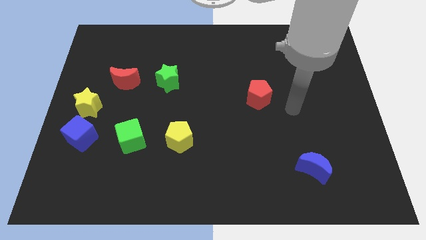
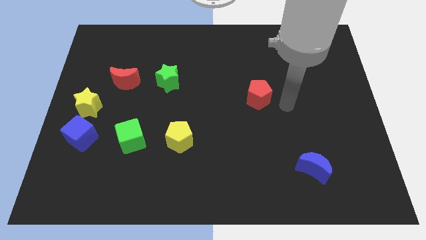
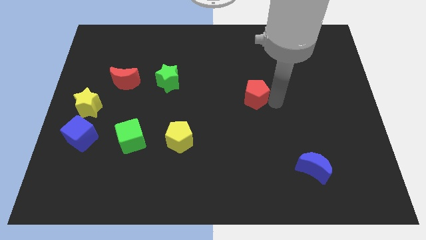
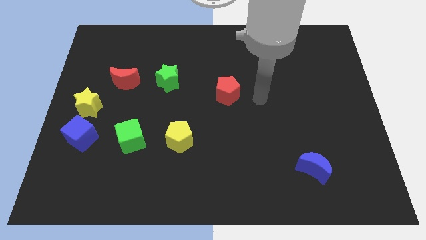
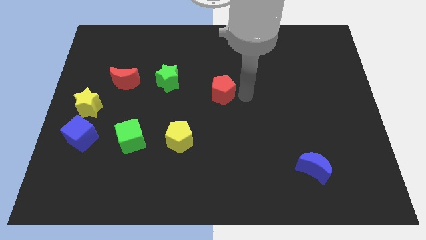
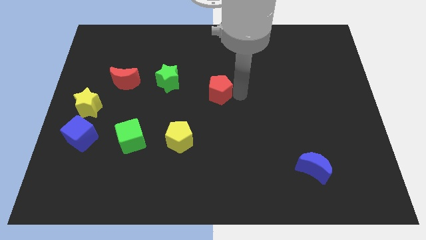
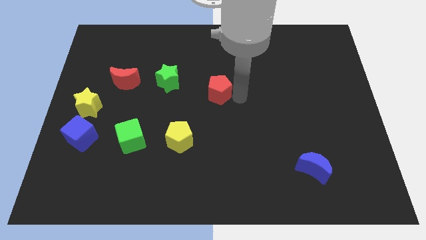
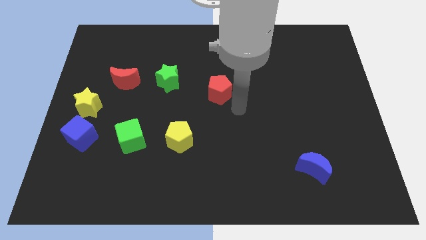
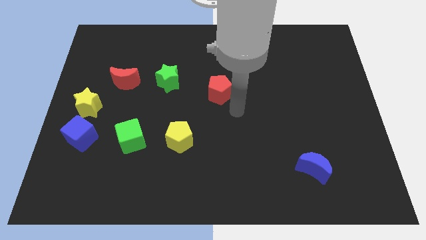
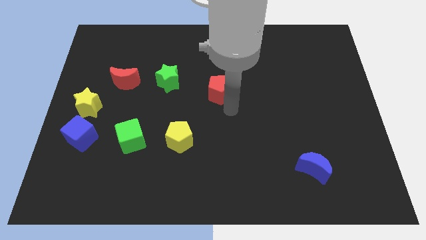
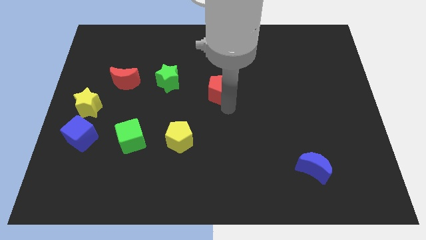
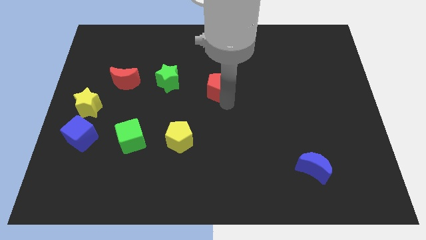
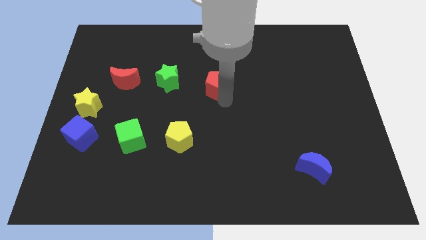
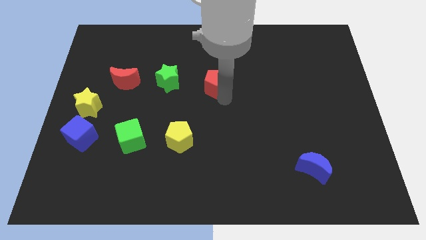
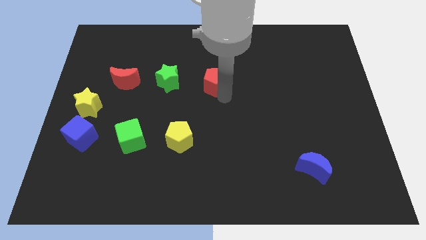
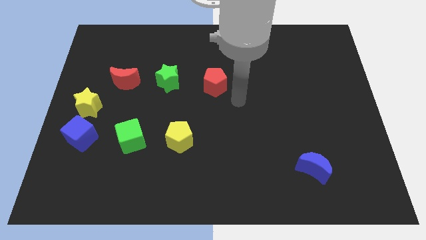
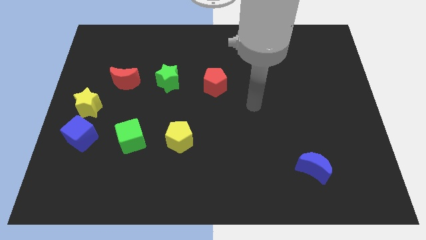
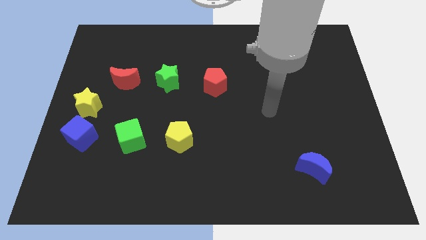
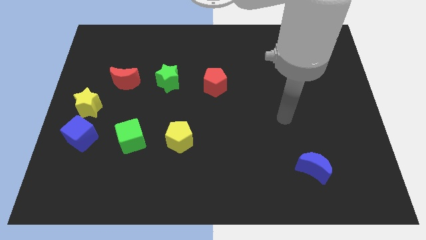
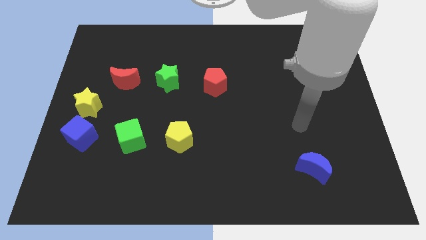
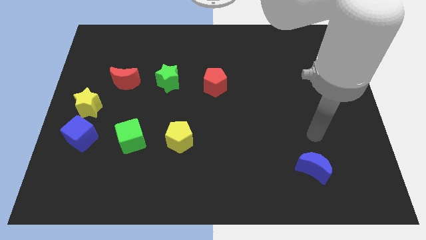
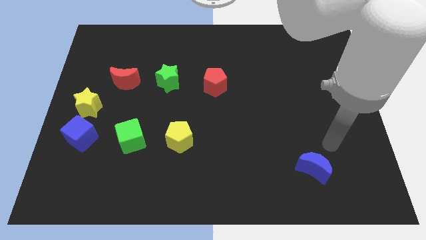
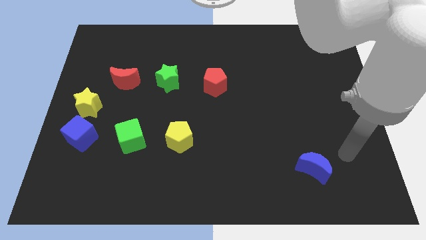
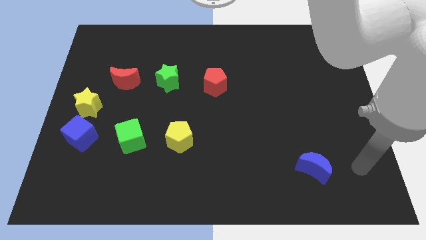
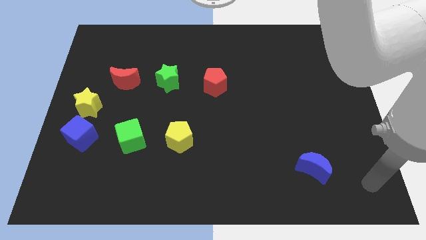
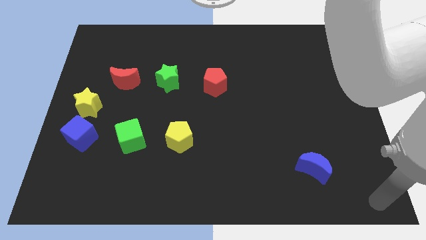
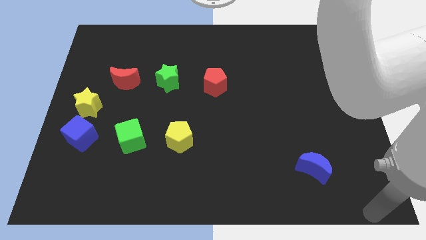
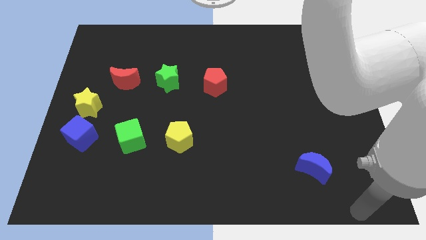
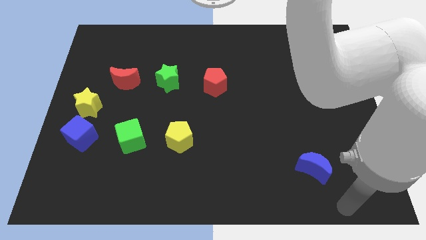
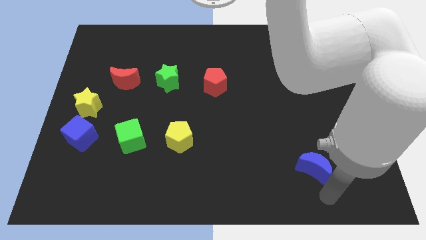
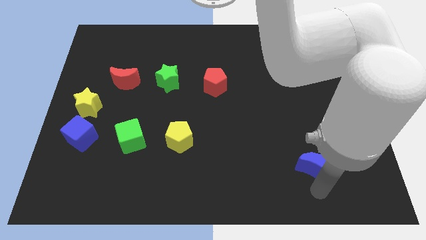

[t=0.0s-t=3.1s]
move the red pentagon to the right of the green star

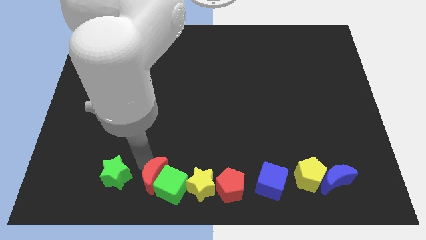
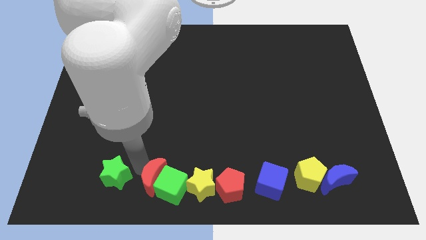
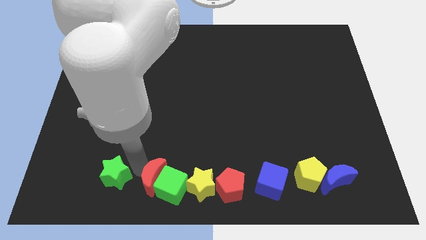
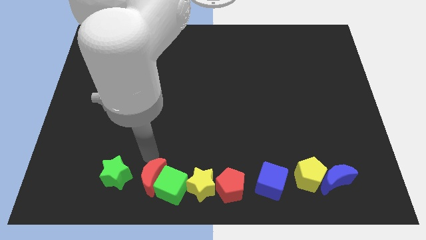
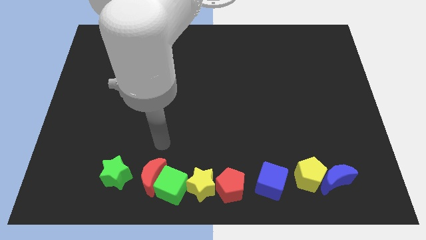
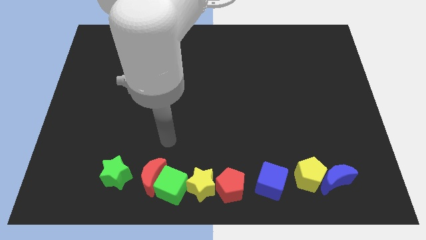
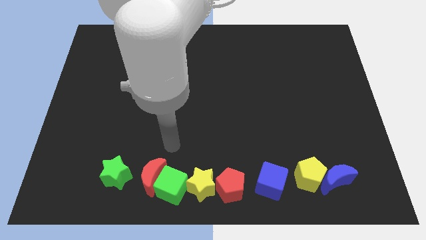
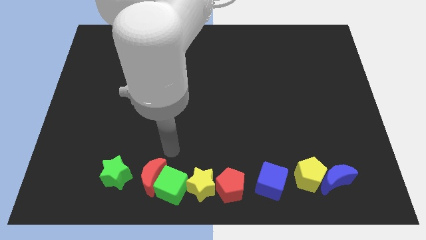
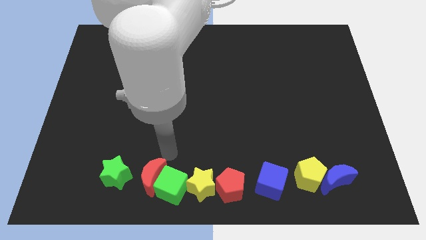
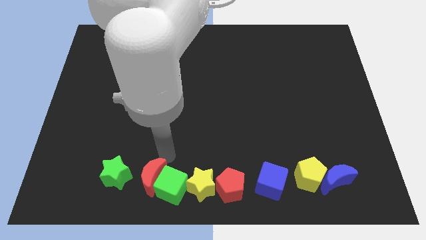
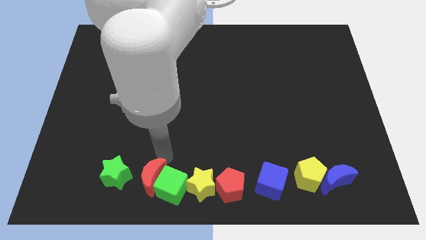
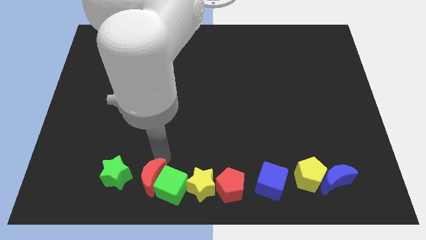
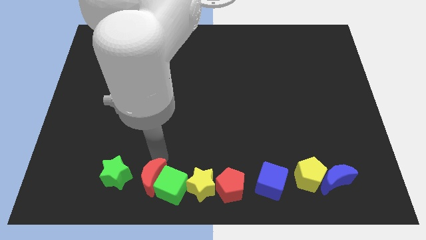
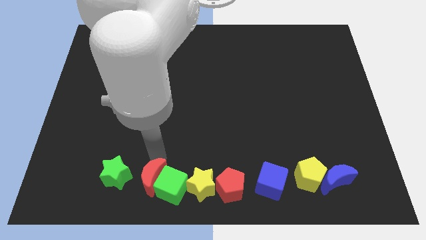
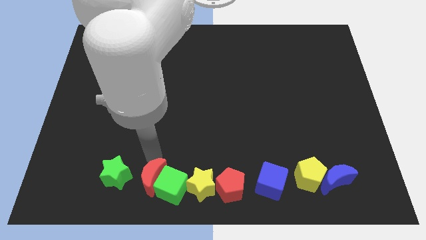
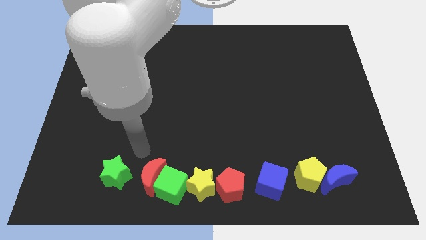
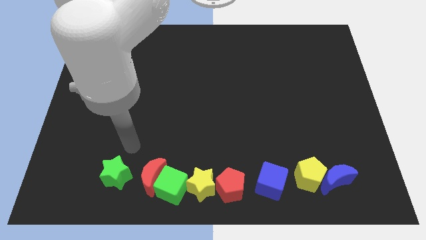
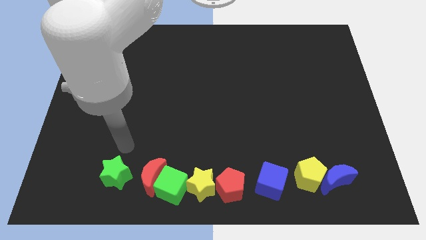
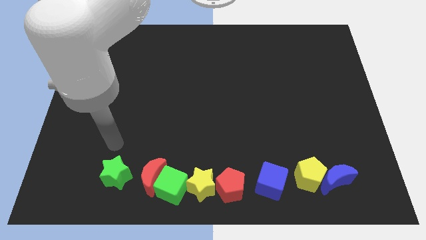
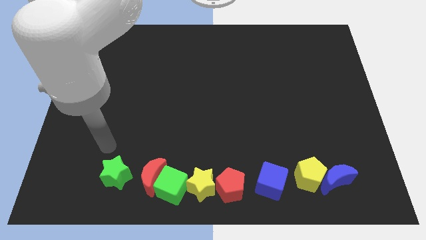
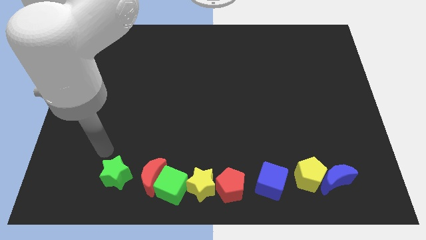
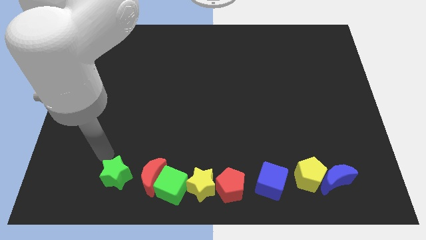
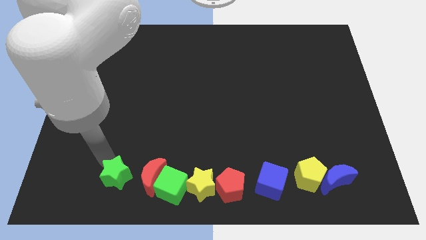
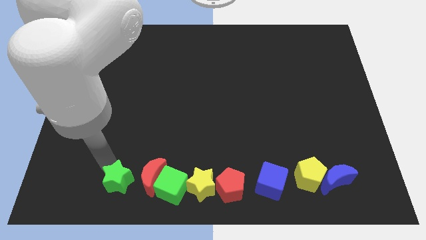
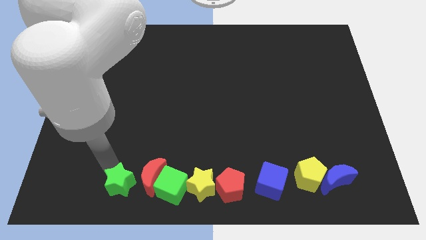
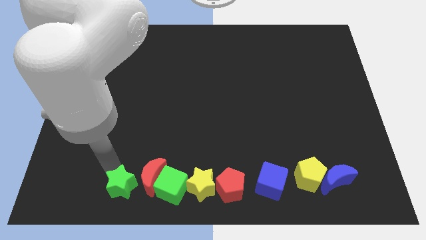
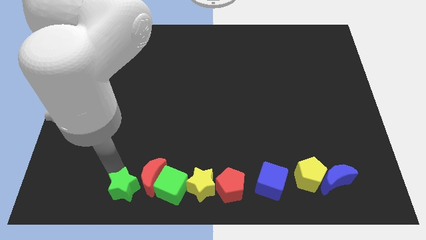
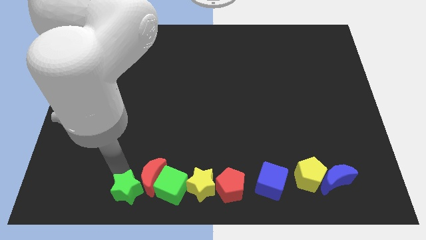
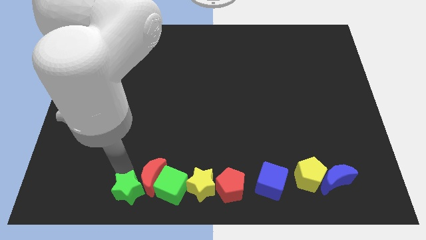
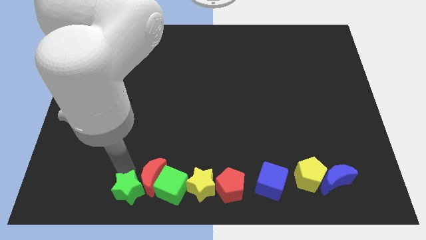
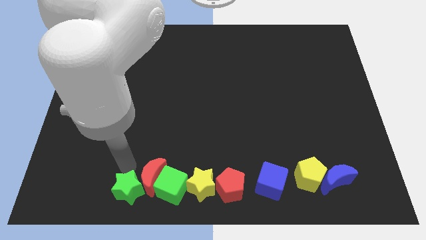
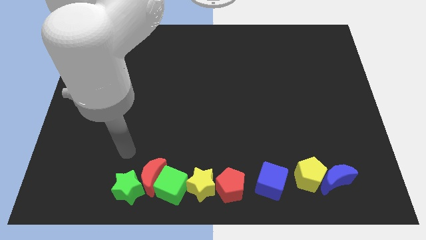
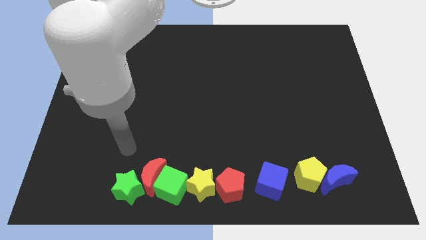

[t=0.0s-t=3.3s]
move the green star to the right to form a horizontal line

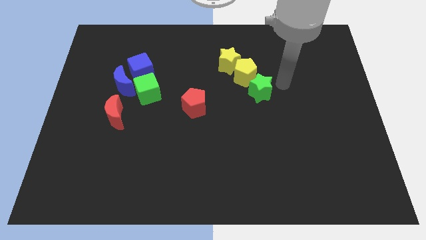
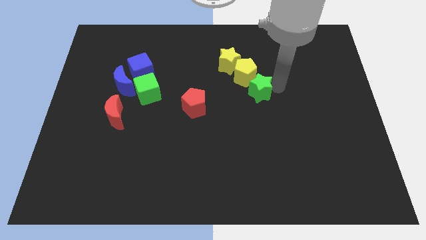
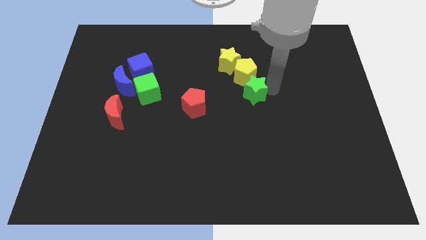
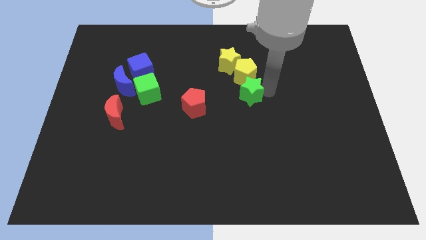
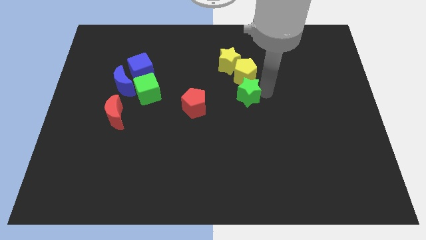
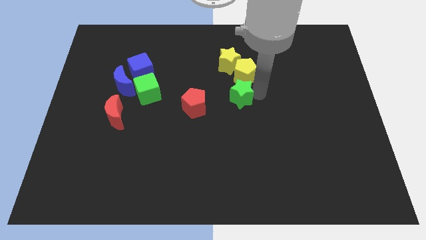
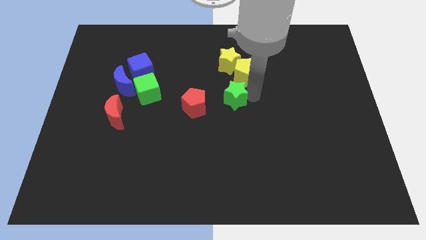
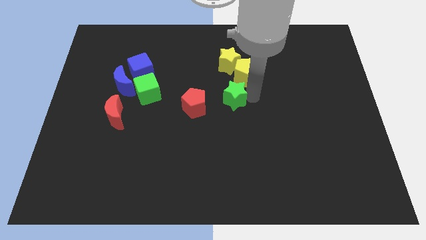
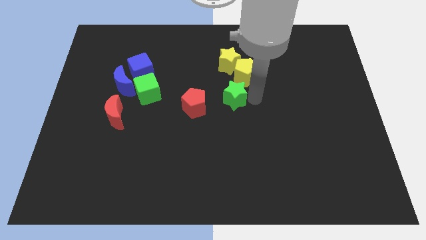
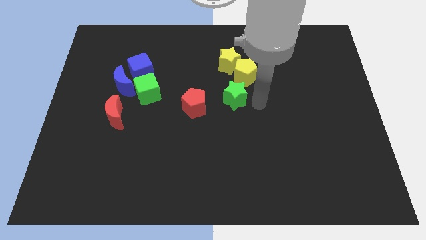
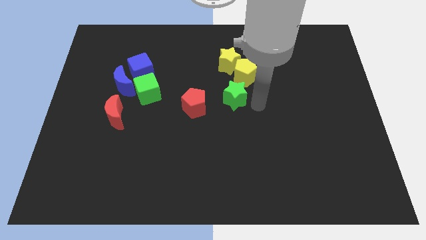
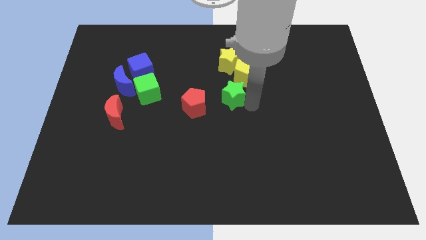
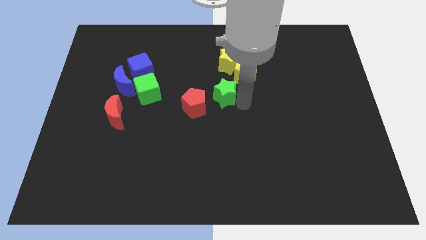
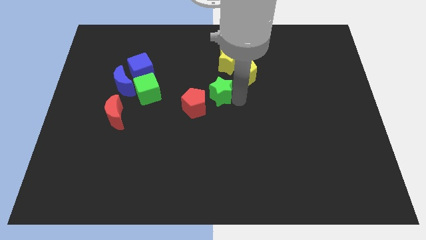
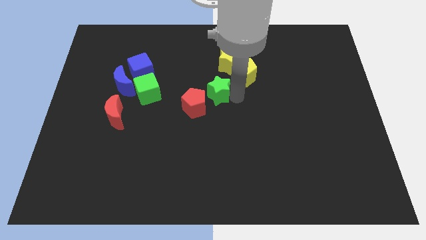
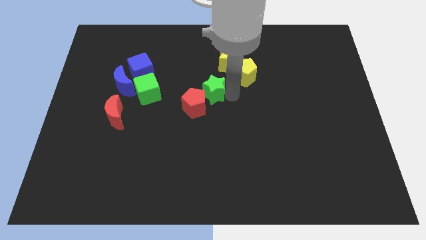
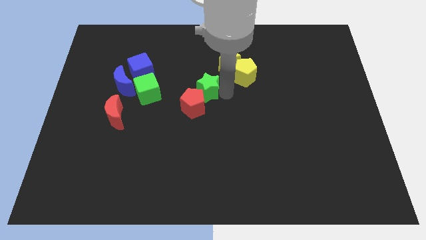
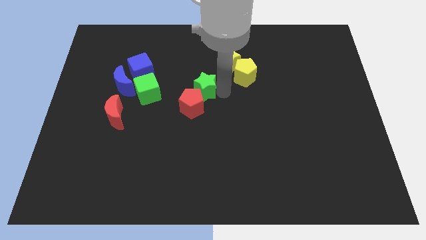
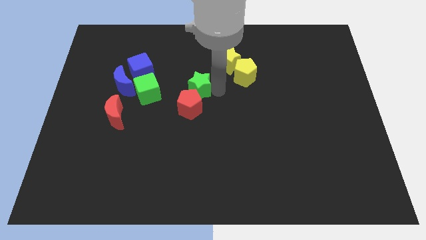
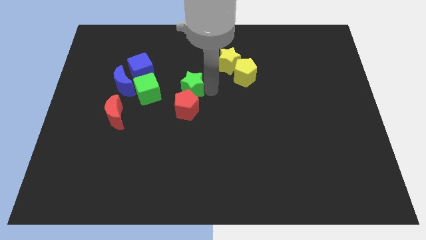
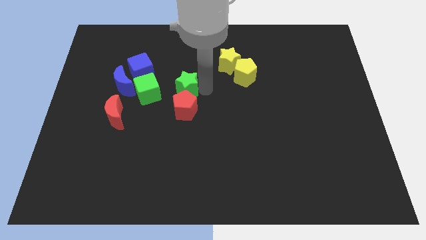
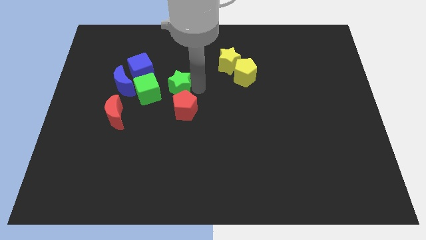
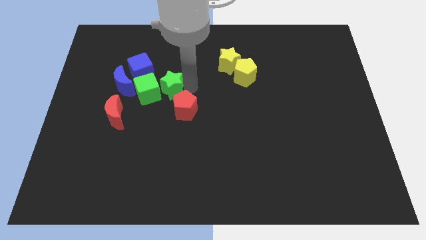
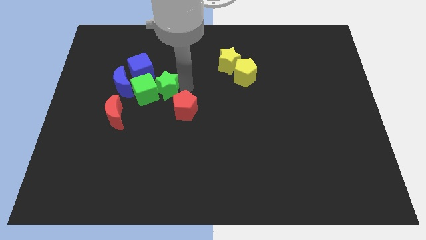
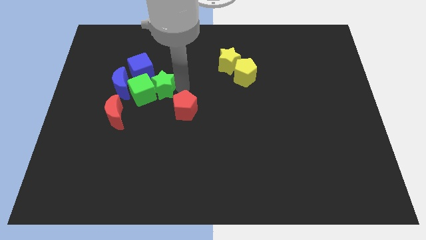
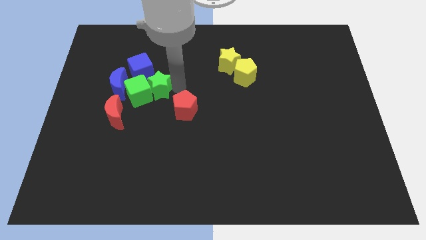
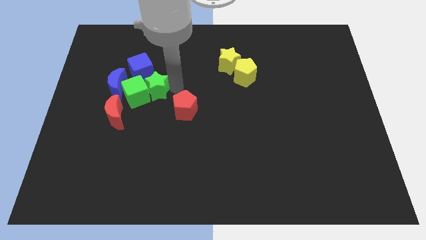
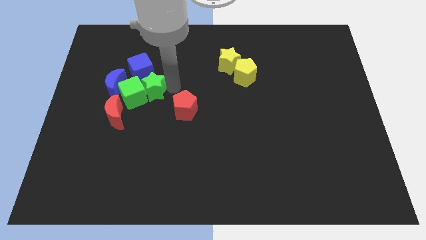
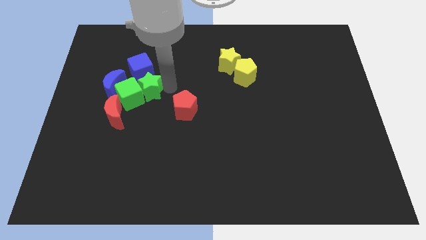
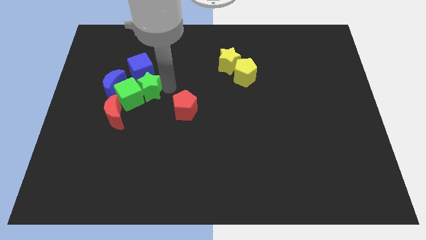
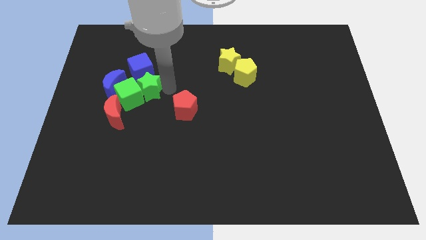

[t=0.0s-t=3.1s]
slide the green star into the right side of the green cube
